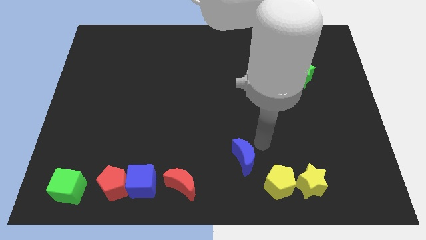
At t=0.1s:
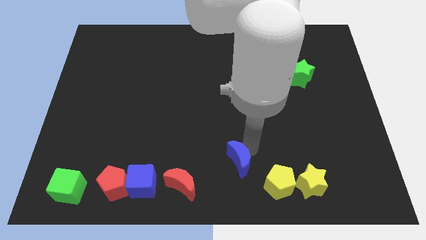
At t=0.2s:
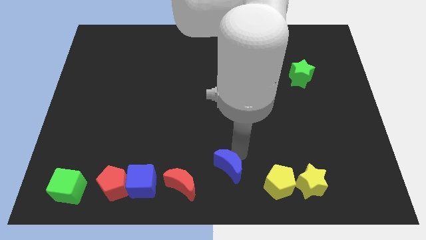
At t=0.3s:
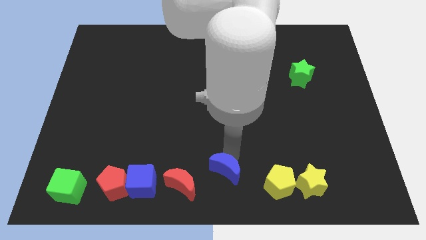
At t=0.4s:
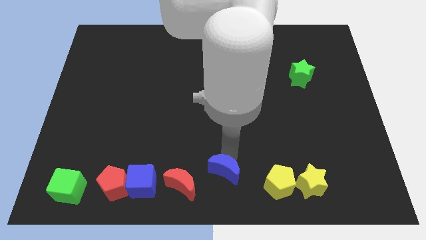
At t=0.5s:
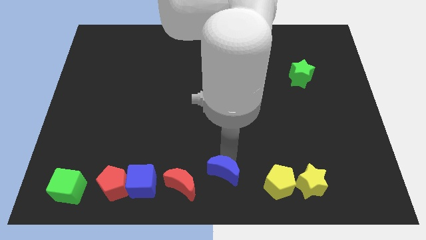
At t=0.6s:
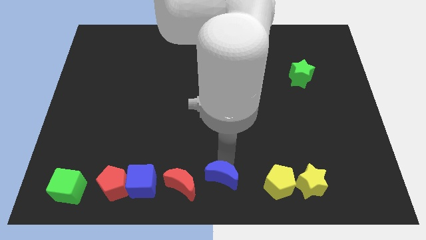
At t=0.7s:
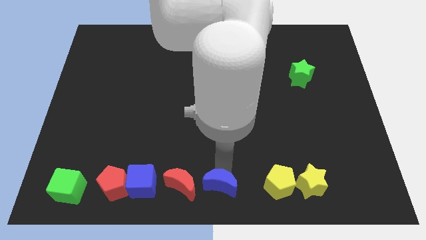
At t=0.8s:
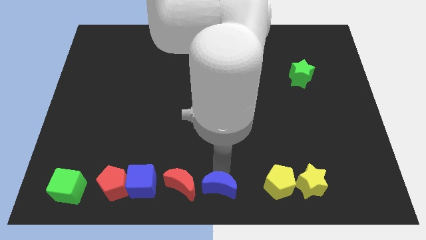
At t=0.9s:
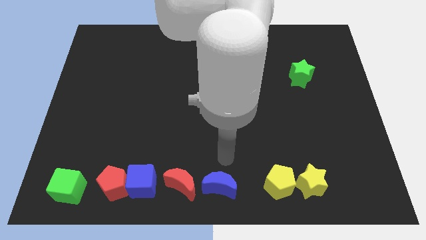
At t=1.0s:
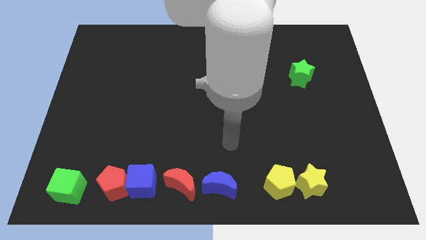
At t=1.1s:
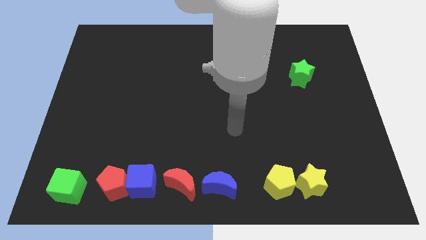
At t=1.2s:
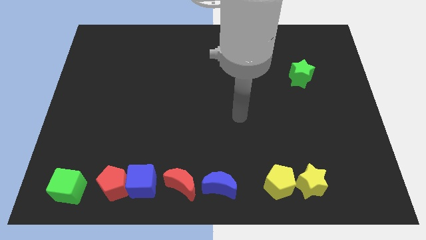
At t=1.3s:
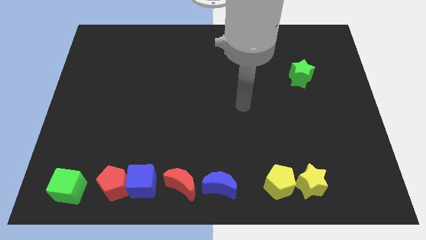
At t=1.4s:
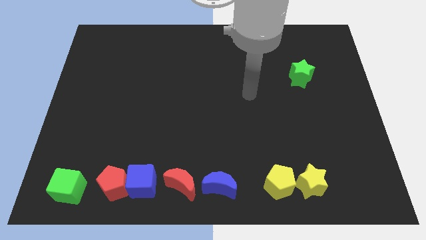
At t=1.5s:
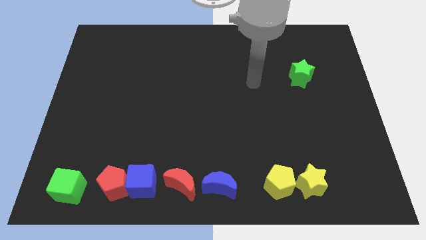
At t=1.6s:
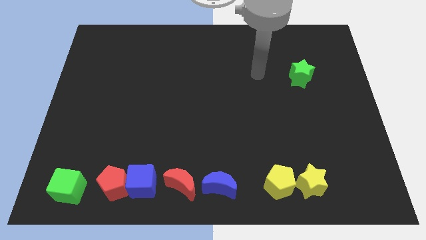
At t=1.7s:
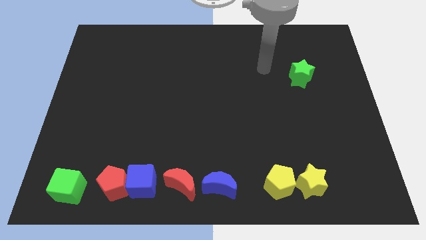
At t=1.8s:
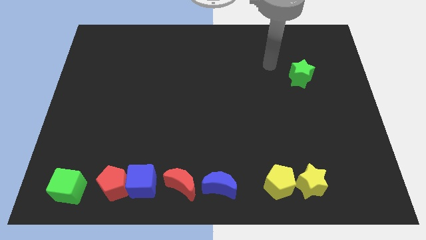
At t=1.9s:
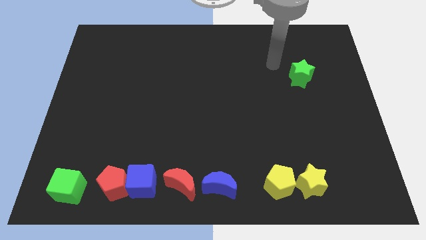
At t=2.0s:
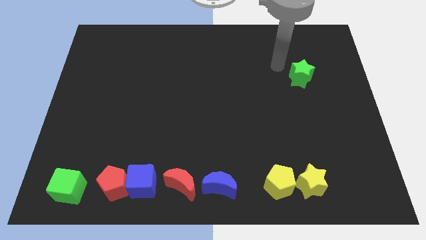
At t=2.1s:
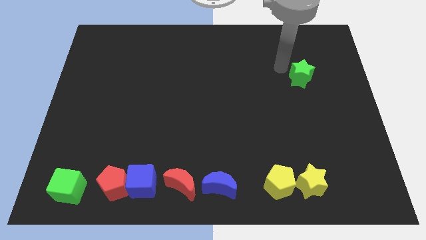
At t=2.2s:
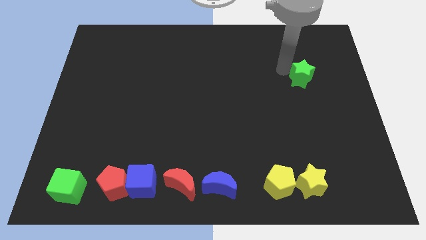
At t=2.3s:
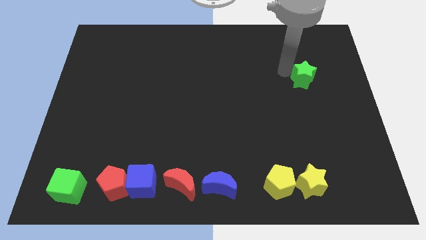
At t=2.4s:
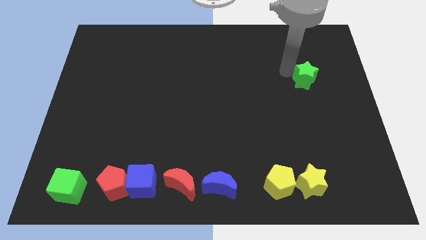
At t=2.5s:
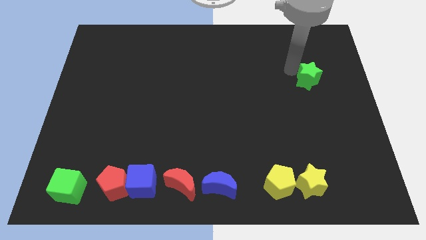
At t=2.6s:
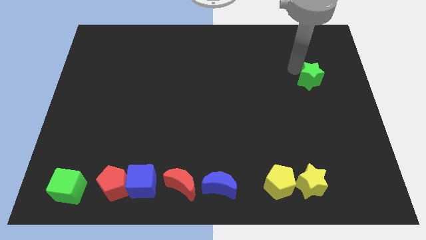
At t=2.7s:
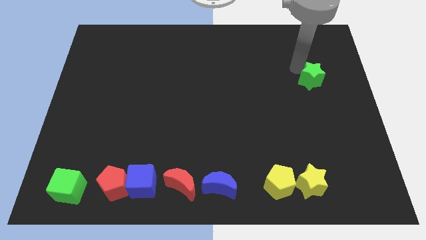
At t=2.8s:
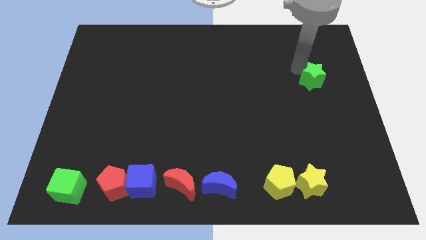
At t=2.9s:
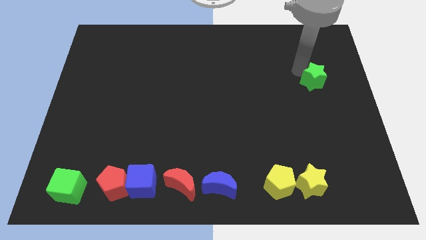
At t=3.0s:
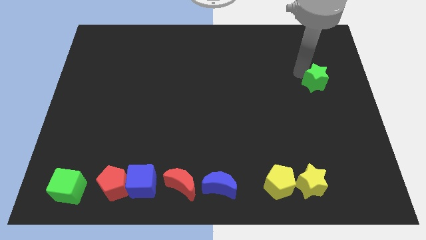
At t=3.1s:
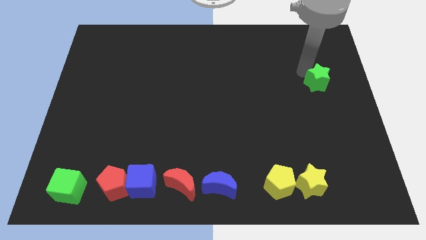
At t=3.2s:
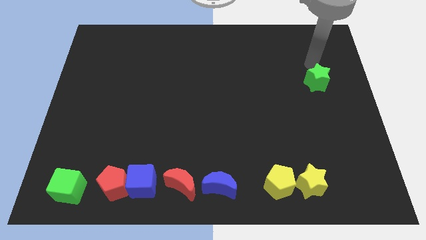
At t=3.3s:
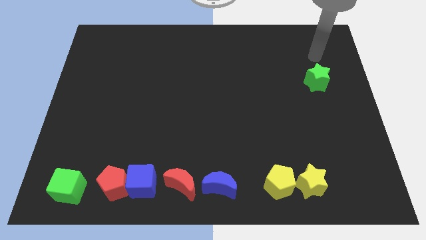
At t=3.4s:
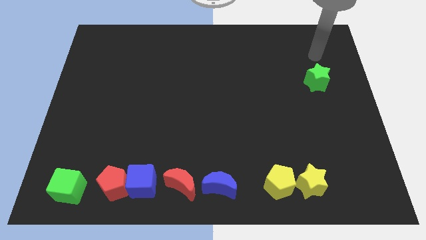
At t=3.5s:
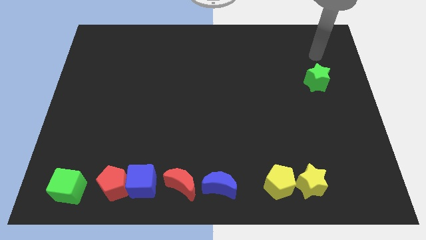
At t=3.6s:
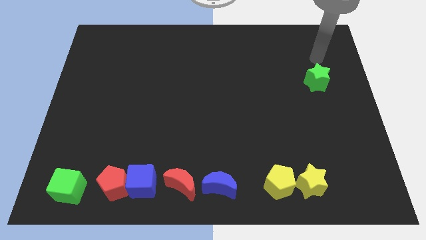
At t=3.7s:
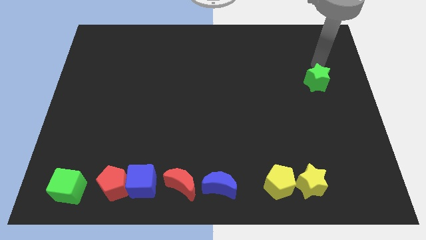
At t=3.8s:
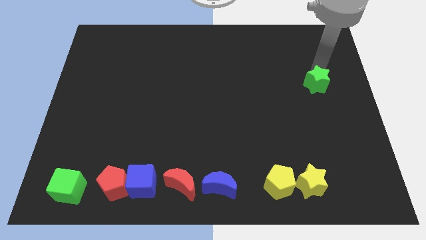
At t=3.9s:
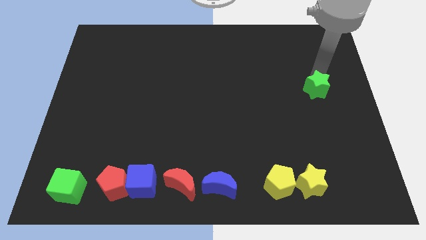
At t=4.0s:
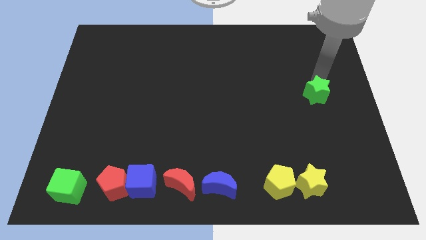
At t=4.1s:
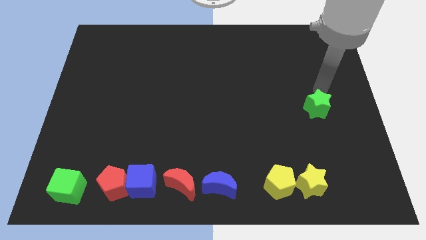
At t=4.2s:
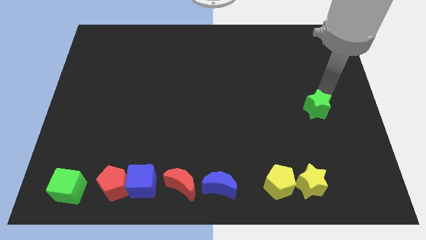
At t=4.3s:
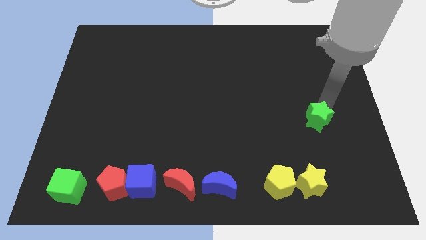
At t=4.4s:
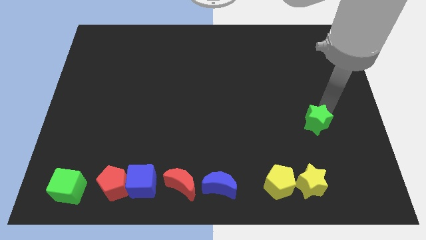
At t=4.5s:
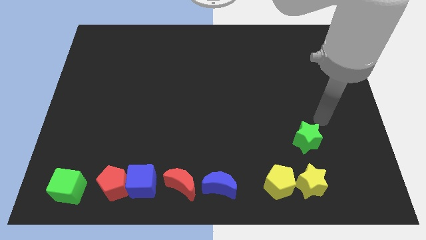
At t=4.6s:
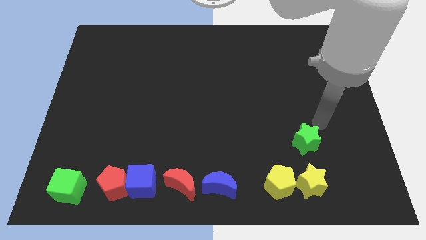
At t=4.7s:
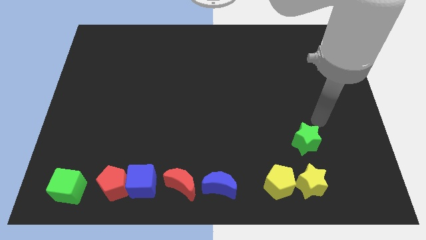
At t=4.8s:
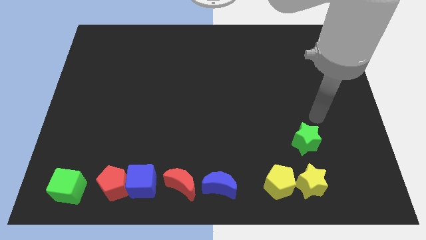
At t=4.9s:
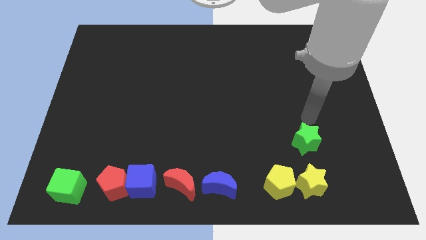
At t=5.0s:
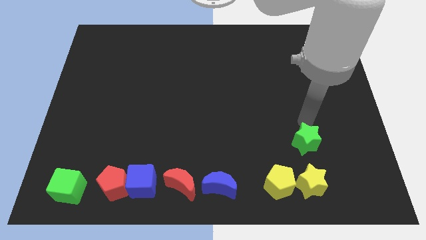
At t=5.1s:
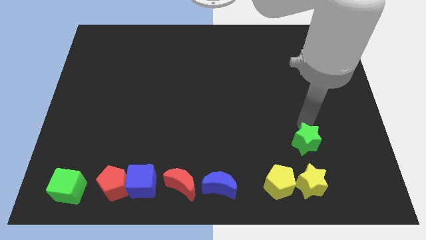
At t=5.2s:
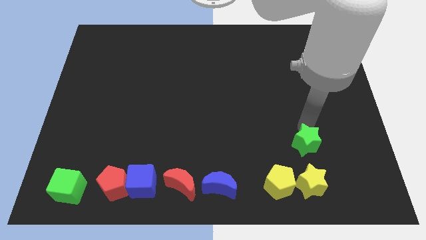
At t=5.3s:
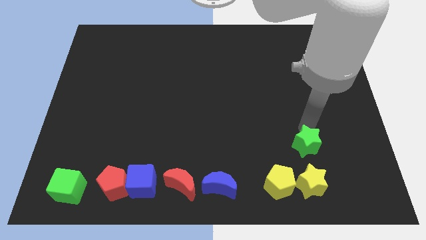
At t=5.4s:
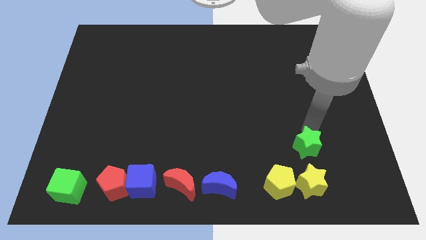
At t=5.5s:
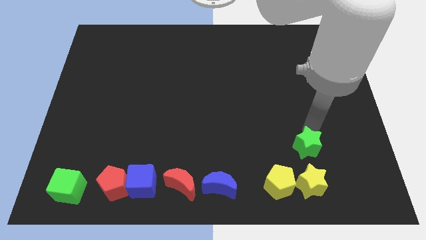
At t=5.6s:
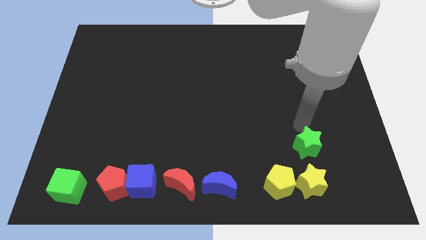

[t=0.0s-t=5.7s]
move the green star above the yellow star

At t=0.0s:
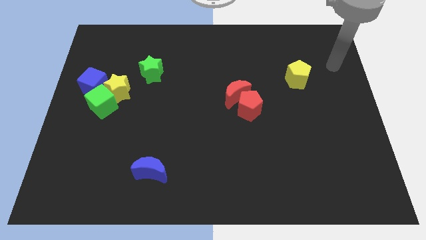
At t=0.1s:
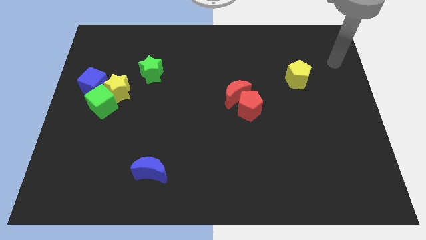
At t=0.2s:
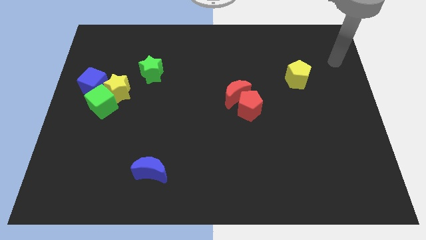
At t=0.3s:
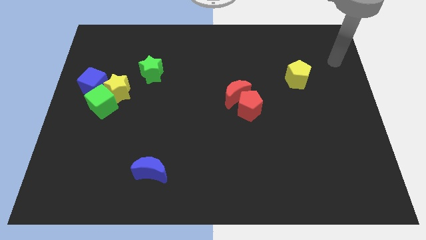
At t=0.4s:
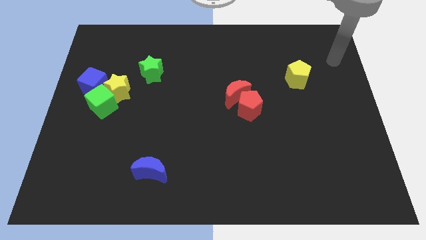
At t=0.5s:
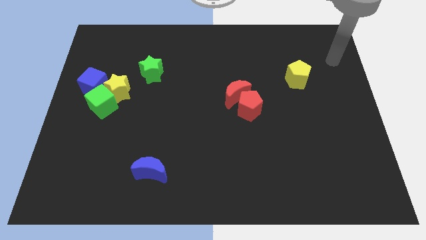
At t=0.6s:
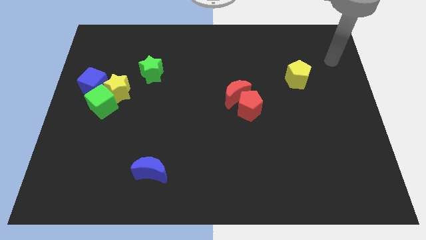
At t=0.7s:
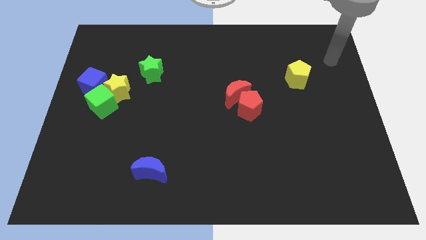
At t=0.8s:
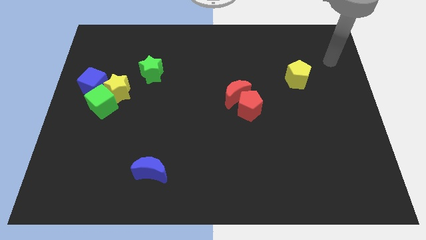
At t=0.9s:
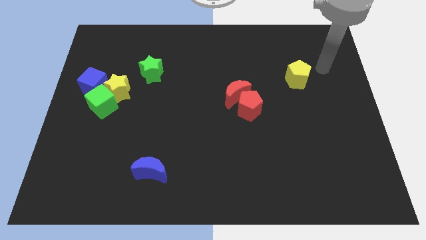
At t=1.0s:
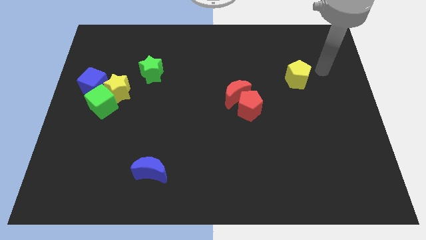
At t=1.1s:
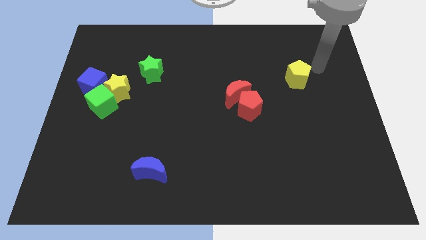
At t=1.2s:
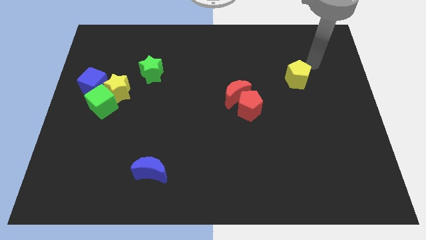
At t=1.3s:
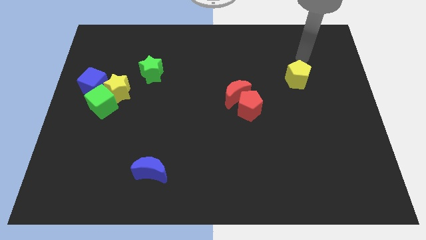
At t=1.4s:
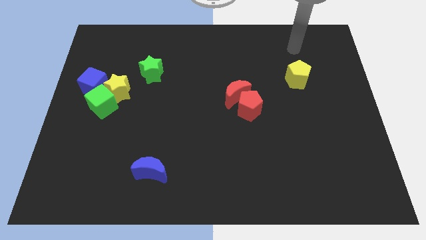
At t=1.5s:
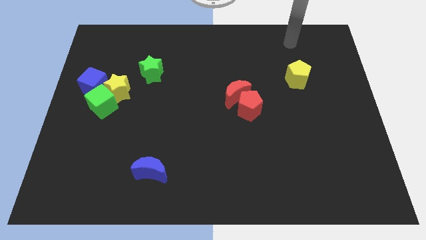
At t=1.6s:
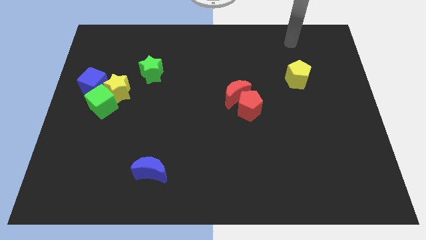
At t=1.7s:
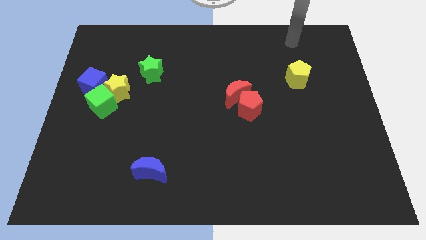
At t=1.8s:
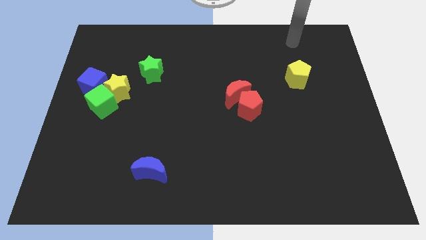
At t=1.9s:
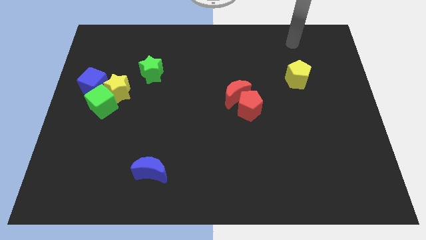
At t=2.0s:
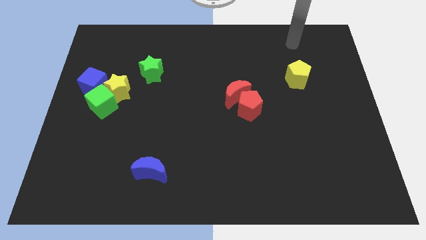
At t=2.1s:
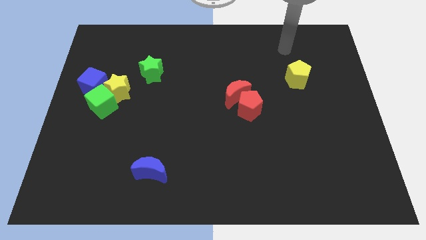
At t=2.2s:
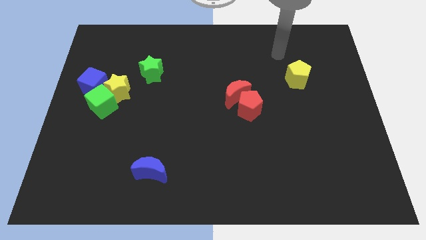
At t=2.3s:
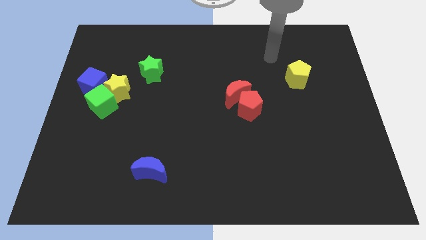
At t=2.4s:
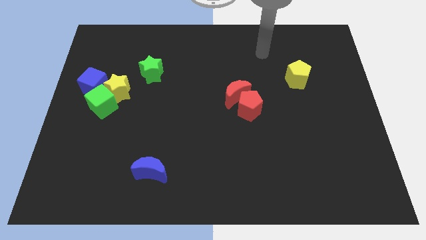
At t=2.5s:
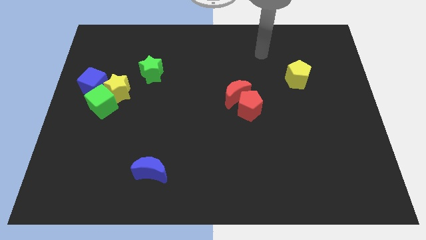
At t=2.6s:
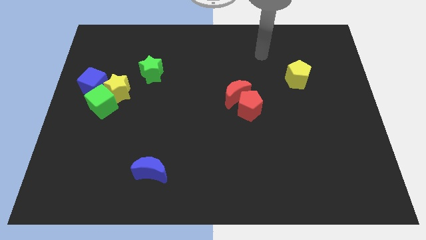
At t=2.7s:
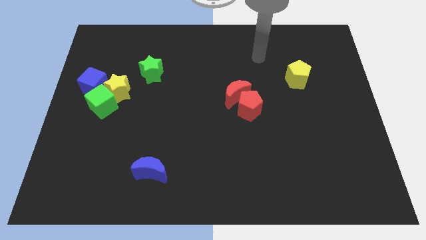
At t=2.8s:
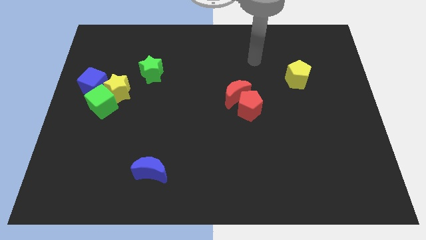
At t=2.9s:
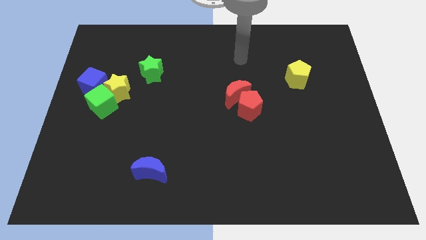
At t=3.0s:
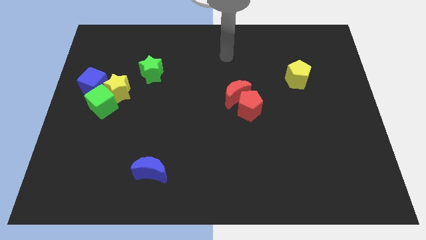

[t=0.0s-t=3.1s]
slide your hand to the top left of red moon

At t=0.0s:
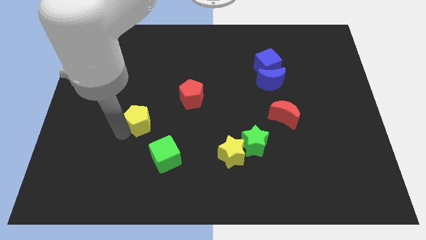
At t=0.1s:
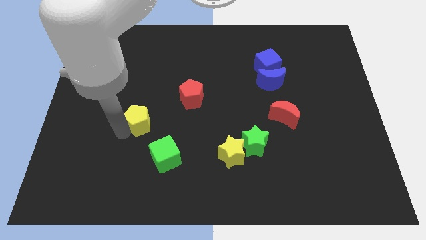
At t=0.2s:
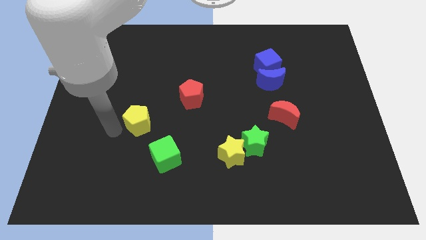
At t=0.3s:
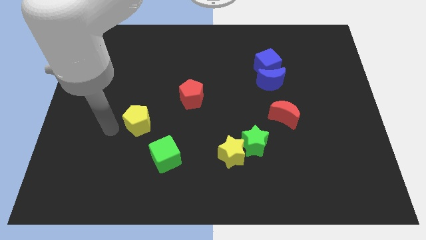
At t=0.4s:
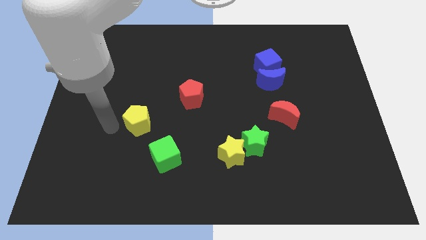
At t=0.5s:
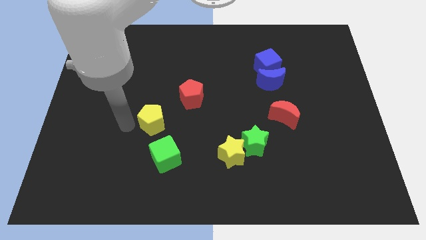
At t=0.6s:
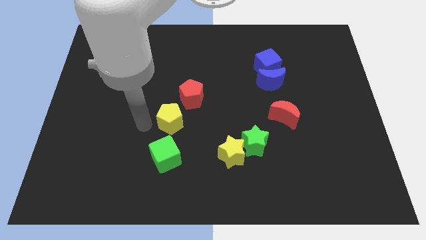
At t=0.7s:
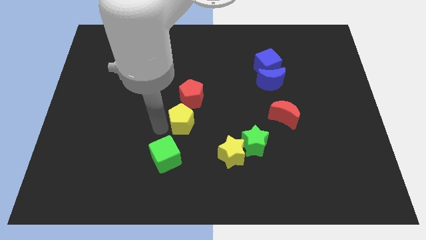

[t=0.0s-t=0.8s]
put yellow pentagon in between red pentagon and green cube
